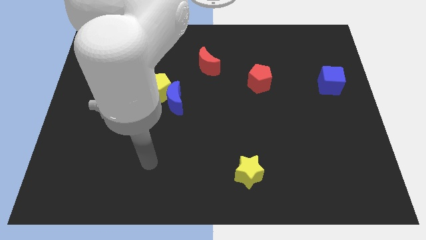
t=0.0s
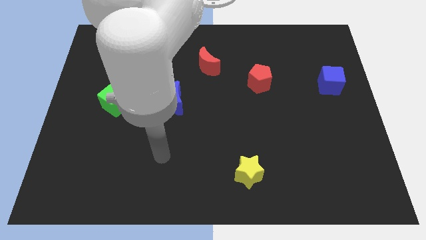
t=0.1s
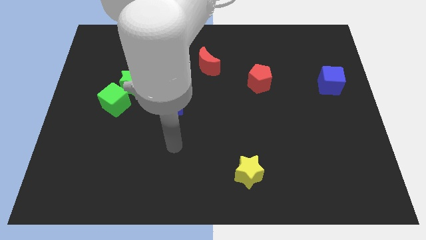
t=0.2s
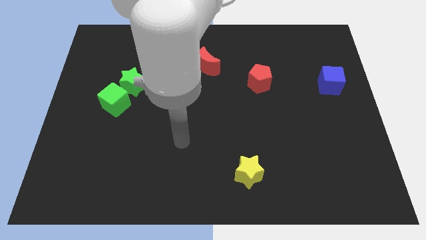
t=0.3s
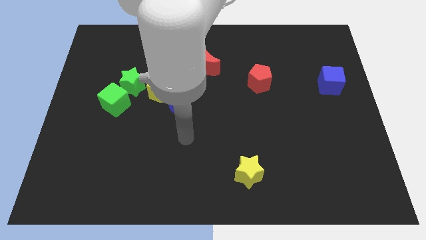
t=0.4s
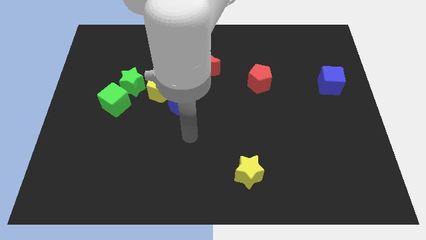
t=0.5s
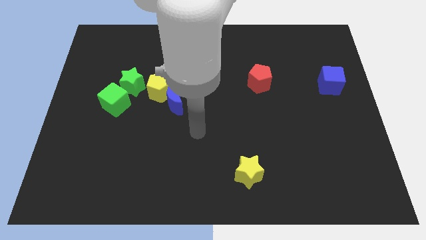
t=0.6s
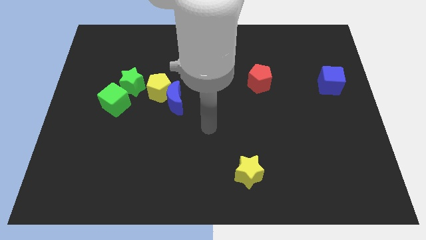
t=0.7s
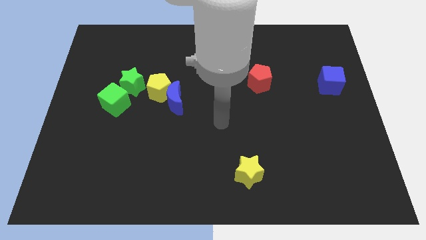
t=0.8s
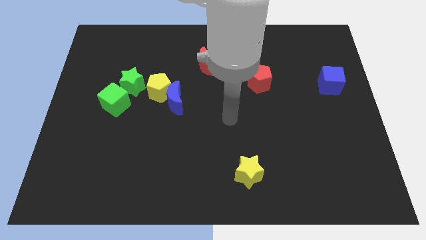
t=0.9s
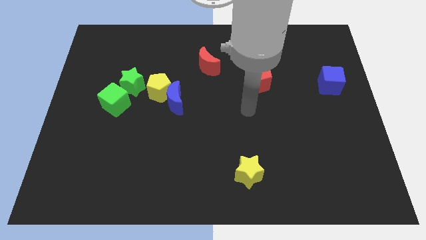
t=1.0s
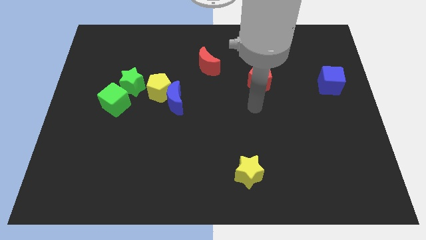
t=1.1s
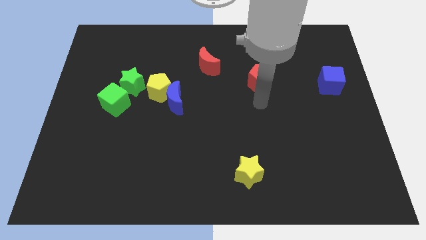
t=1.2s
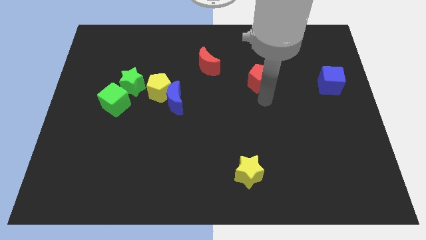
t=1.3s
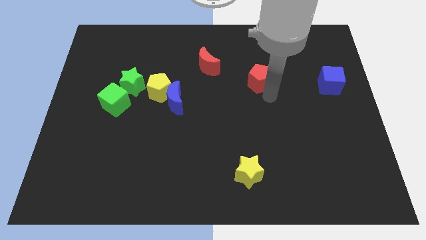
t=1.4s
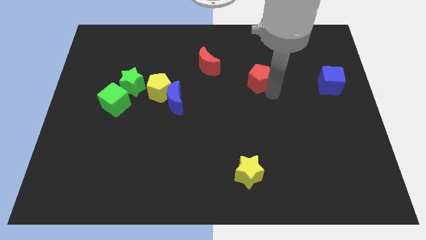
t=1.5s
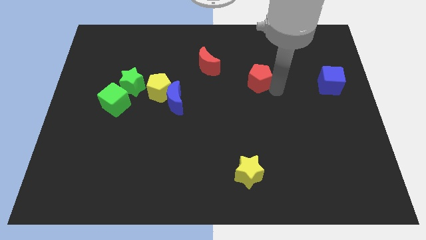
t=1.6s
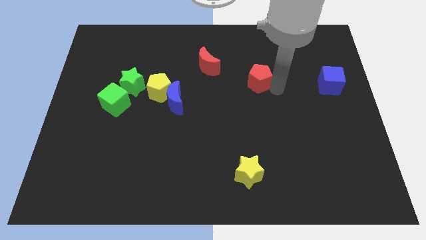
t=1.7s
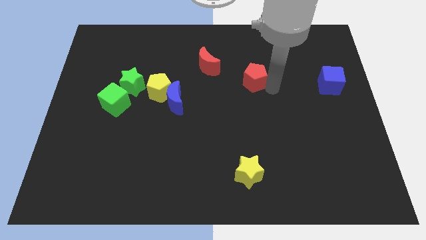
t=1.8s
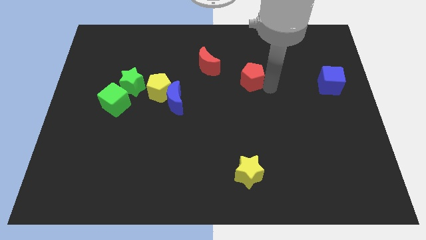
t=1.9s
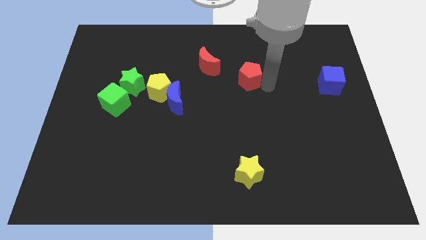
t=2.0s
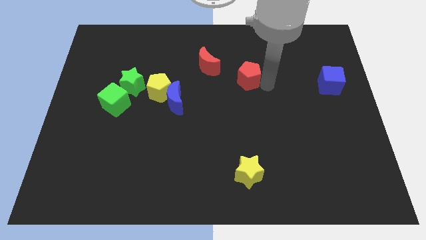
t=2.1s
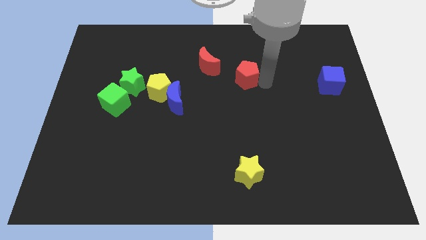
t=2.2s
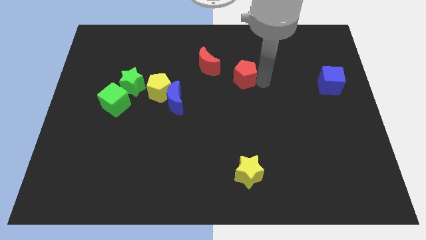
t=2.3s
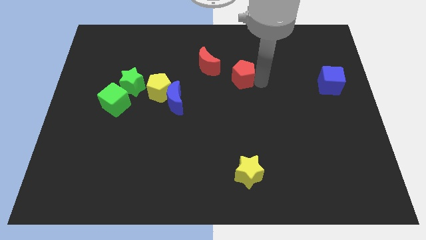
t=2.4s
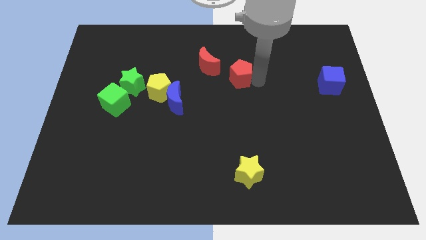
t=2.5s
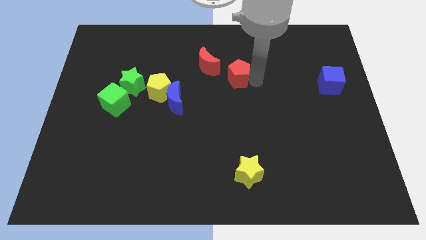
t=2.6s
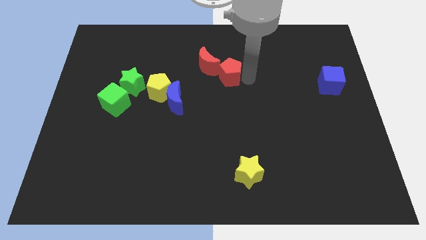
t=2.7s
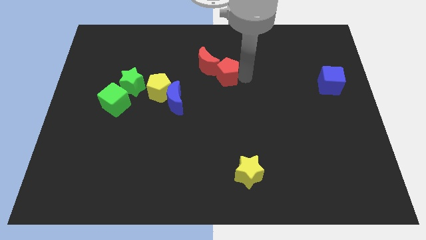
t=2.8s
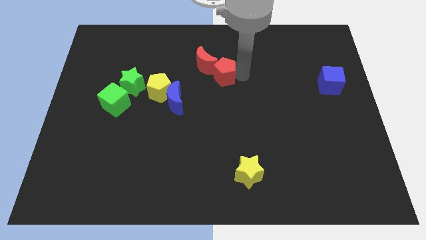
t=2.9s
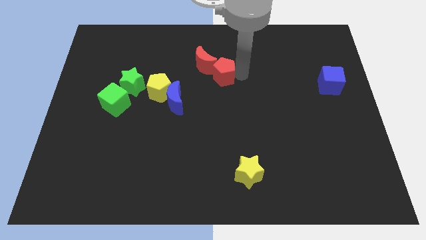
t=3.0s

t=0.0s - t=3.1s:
put the red pentagon towards the red moon

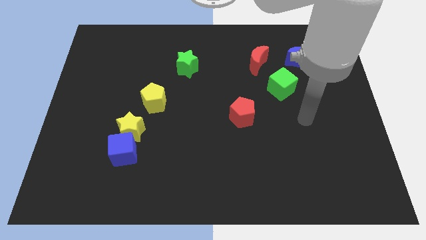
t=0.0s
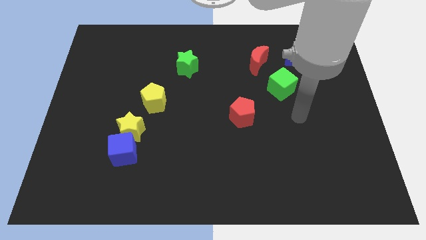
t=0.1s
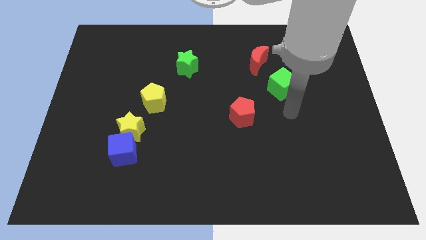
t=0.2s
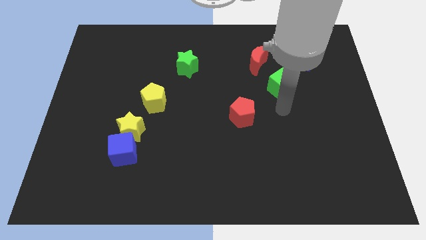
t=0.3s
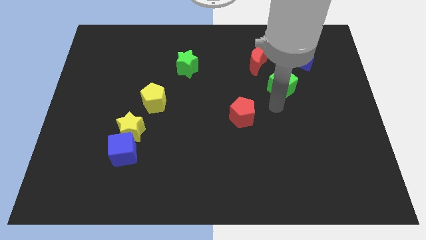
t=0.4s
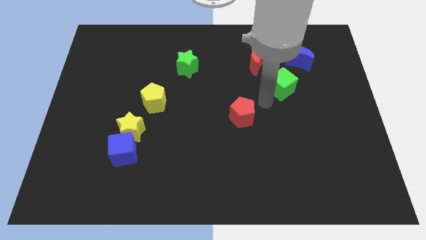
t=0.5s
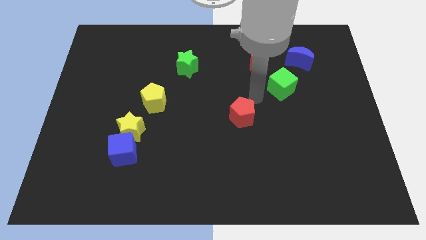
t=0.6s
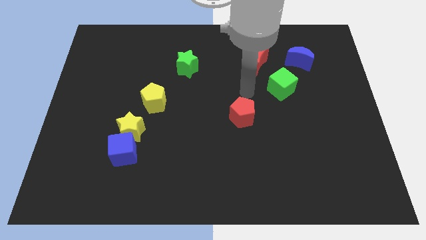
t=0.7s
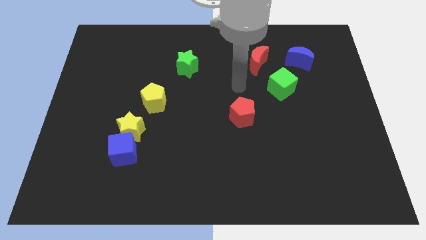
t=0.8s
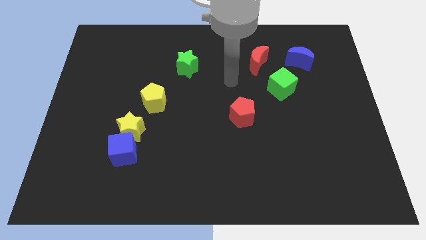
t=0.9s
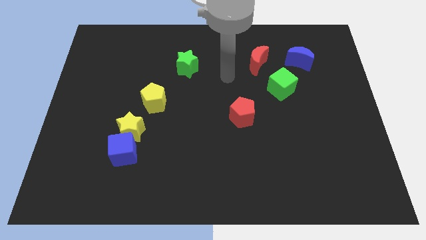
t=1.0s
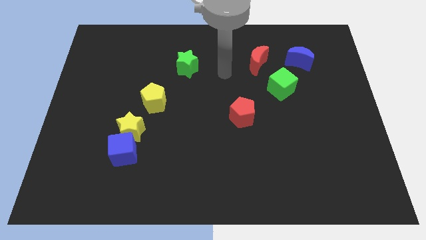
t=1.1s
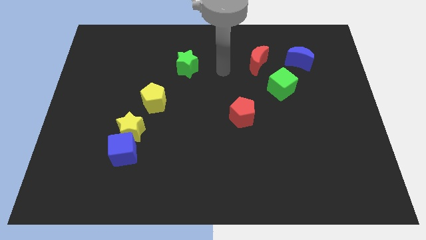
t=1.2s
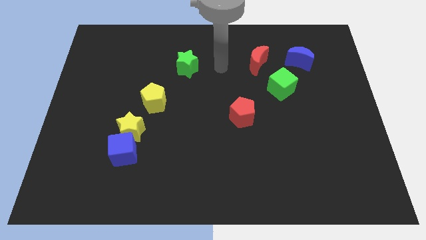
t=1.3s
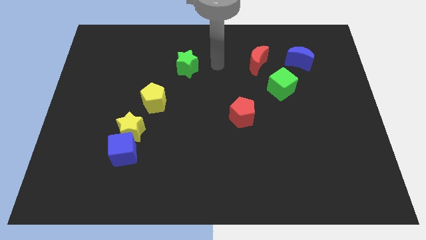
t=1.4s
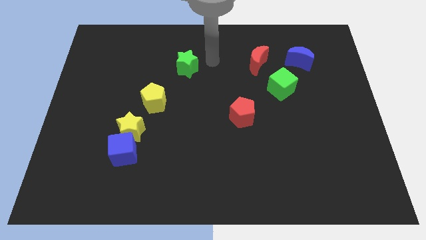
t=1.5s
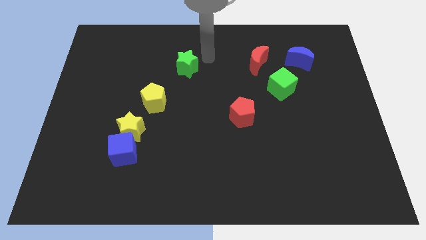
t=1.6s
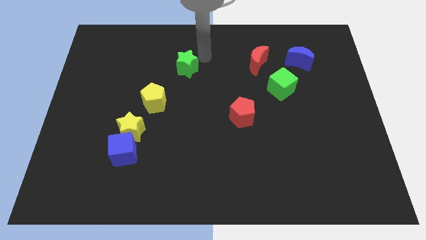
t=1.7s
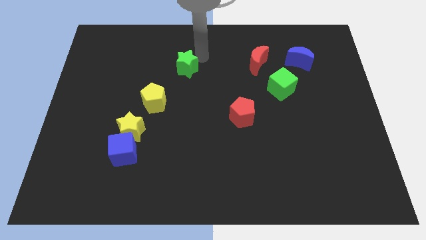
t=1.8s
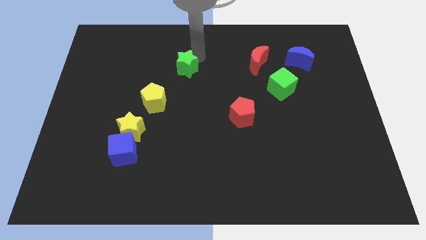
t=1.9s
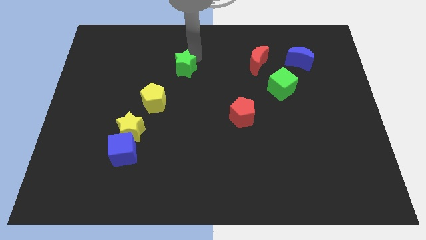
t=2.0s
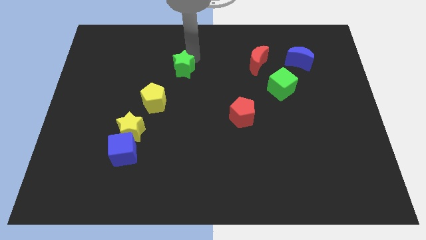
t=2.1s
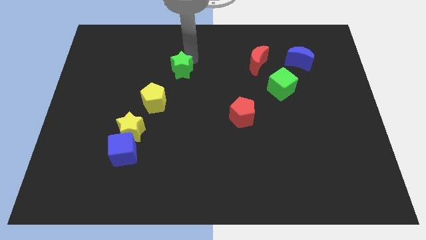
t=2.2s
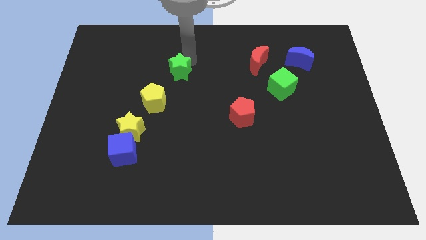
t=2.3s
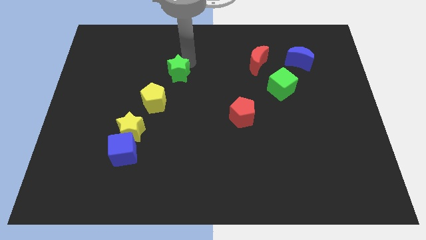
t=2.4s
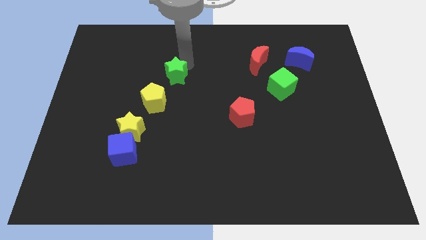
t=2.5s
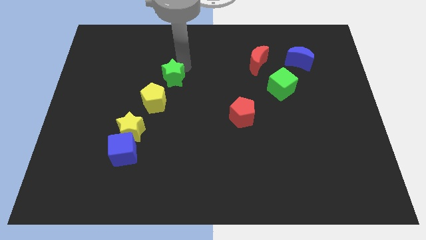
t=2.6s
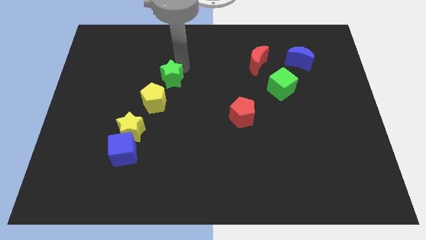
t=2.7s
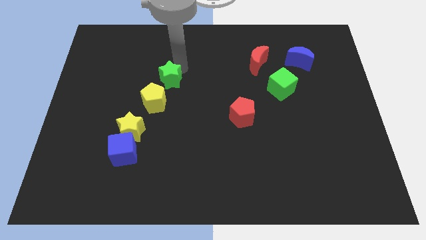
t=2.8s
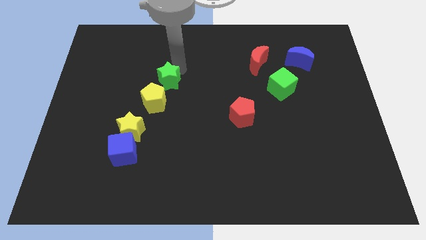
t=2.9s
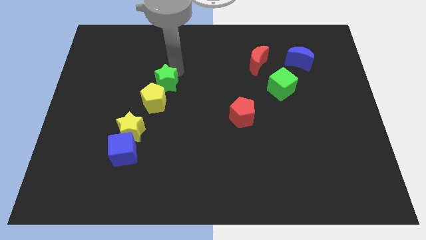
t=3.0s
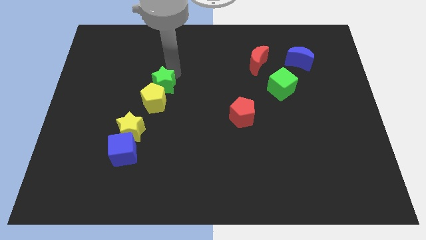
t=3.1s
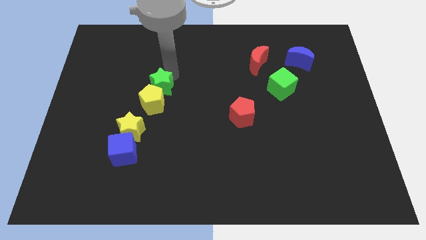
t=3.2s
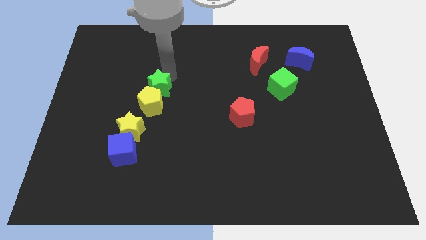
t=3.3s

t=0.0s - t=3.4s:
move the green star close to the yellow pentagon

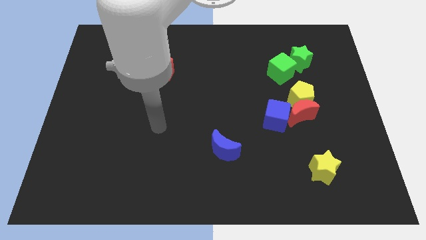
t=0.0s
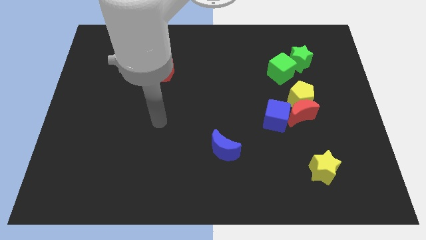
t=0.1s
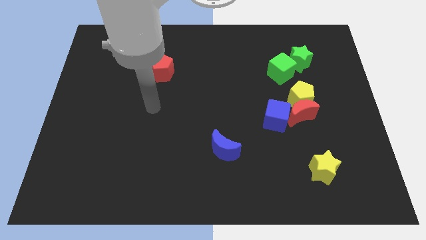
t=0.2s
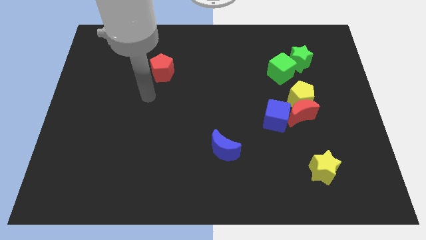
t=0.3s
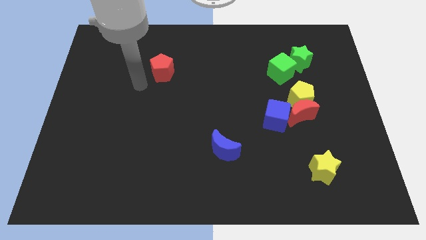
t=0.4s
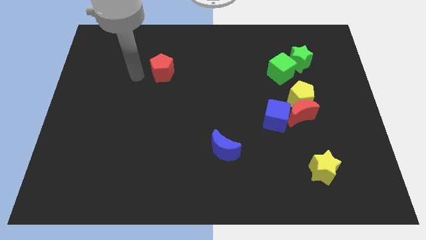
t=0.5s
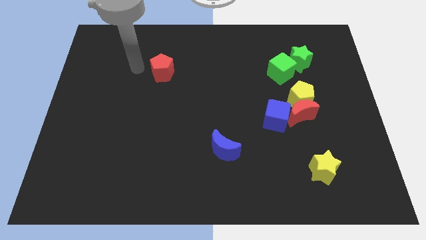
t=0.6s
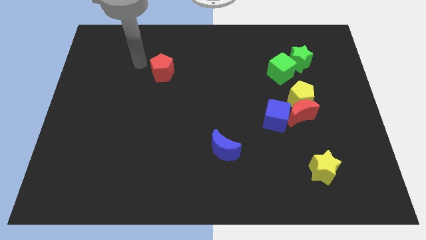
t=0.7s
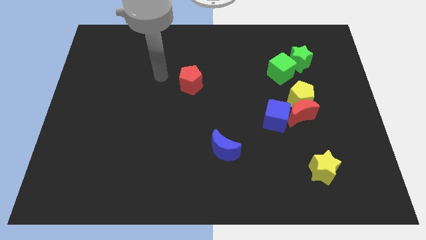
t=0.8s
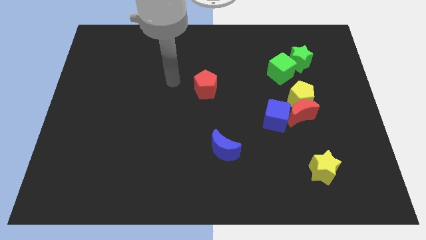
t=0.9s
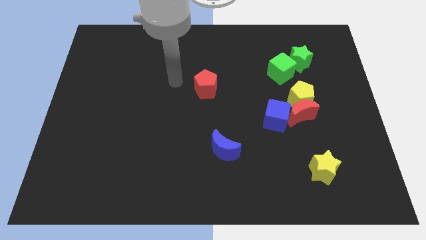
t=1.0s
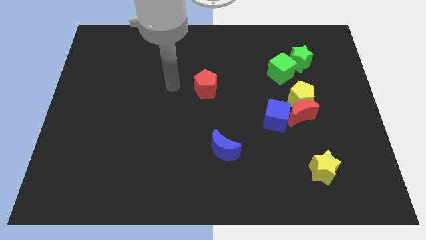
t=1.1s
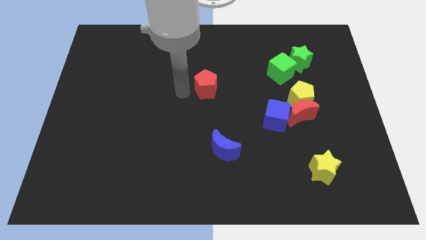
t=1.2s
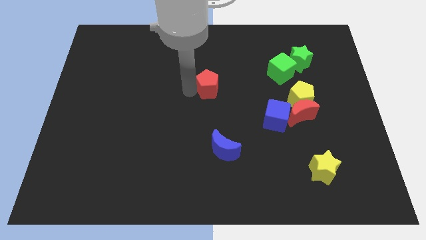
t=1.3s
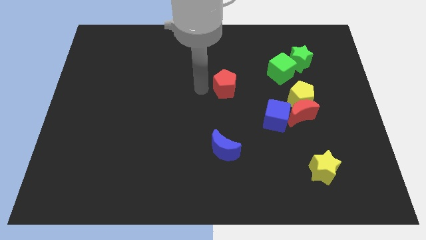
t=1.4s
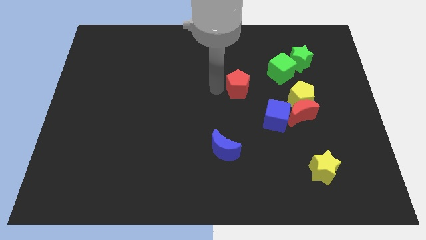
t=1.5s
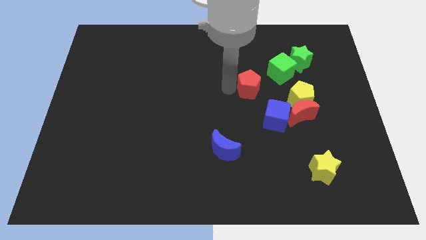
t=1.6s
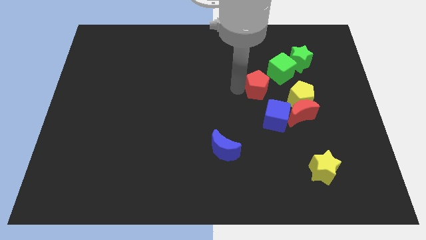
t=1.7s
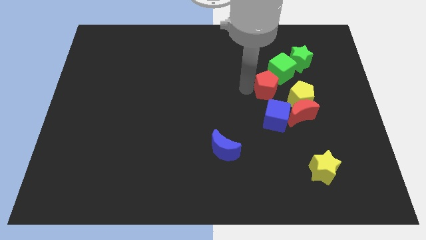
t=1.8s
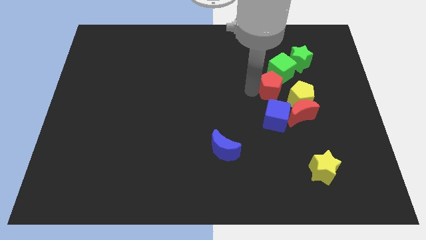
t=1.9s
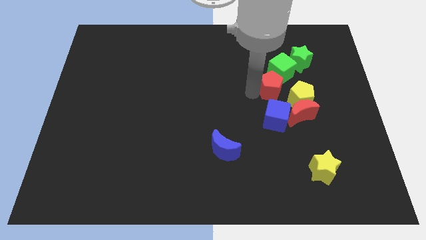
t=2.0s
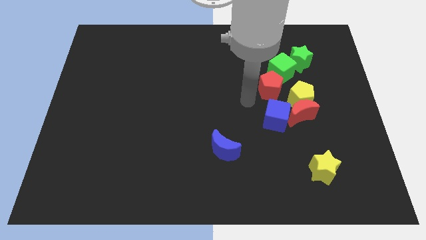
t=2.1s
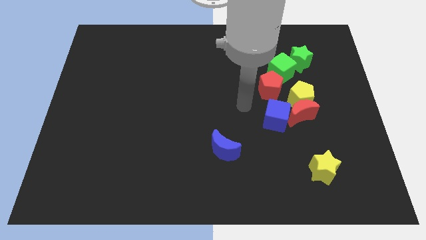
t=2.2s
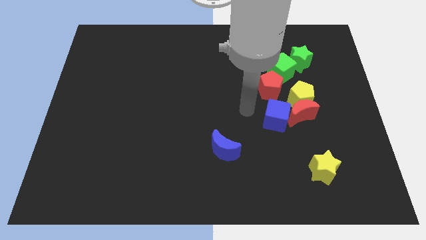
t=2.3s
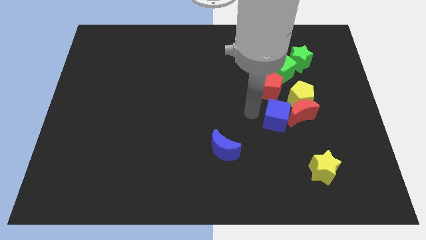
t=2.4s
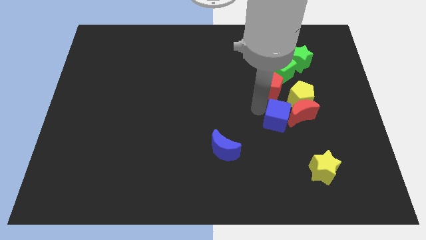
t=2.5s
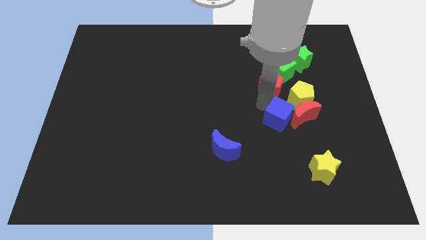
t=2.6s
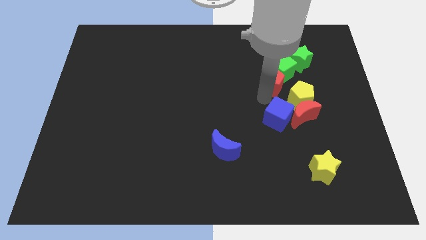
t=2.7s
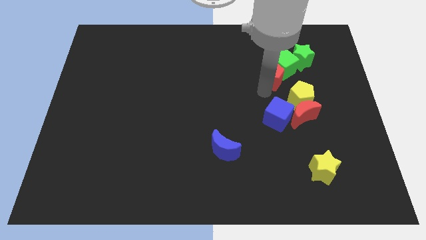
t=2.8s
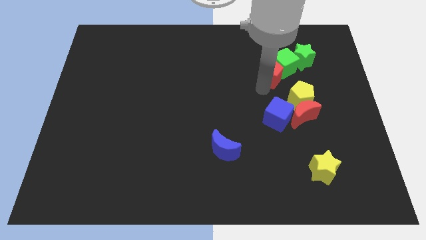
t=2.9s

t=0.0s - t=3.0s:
move the red pentagon close to the green cube
